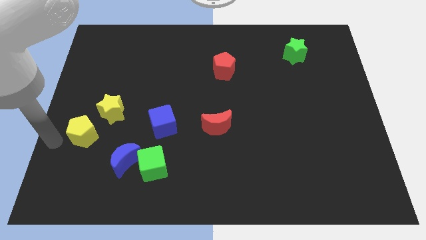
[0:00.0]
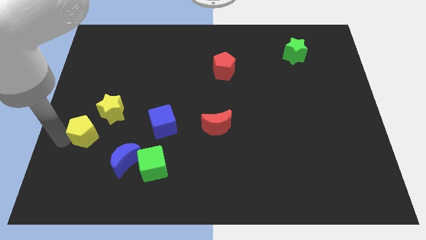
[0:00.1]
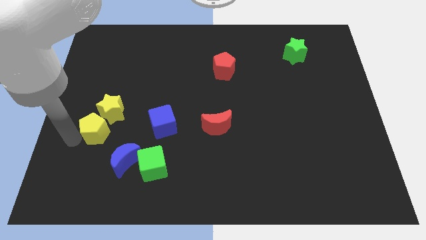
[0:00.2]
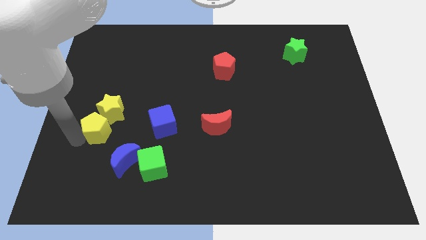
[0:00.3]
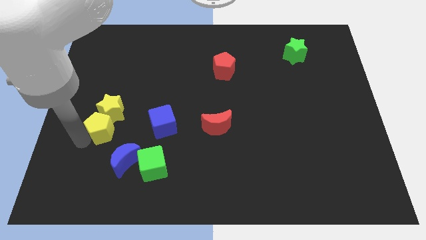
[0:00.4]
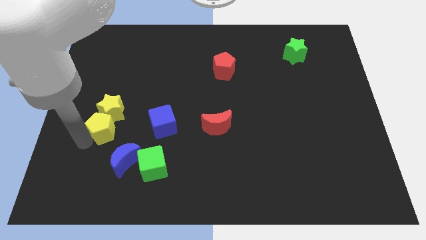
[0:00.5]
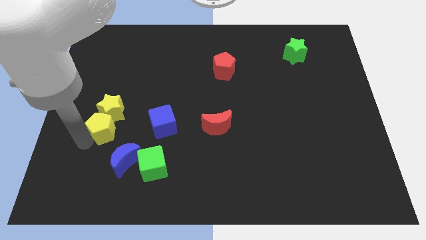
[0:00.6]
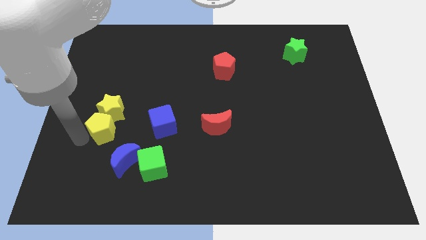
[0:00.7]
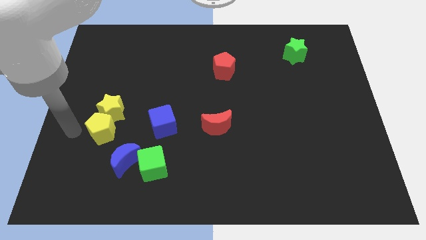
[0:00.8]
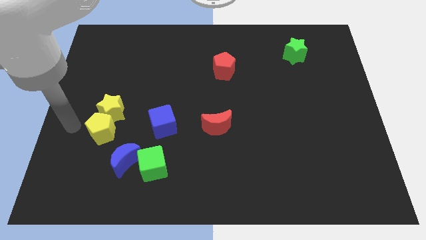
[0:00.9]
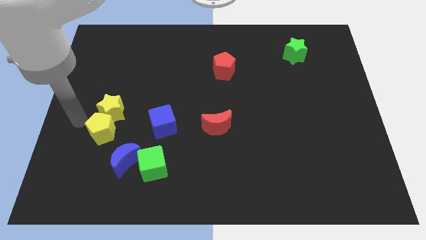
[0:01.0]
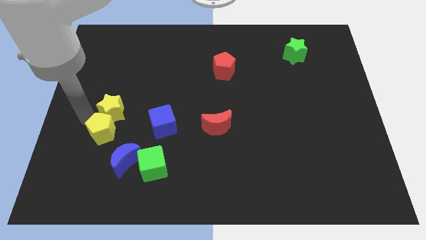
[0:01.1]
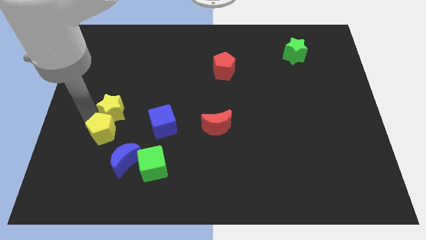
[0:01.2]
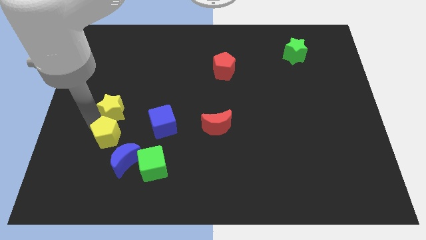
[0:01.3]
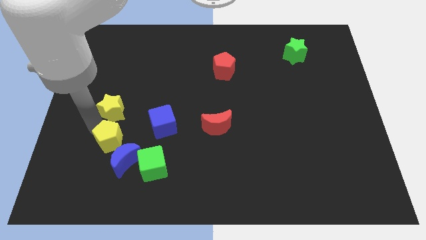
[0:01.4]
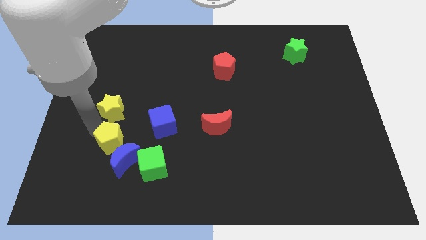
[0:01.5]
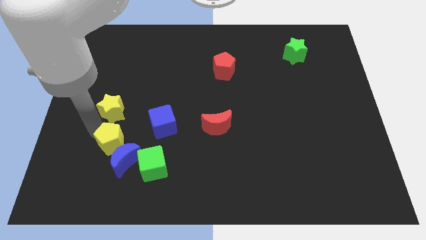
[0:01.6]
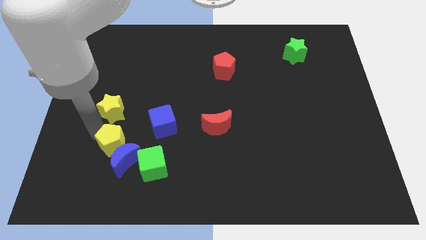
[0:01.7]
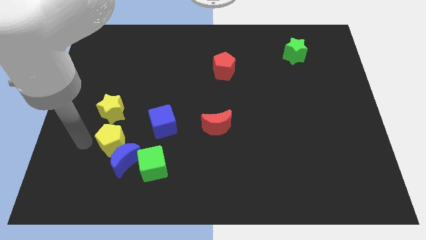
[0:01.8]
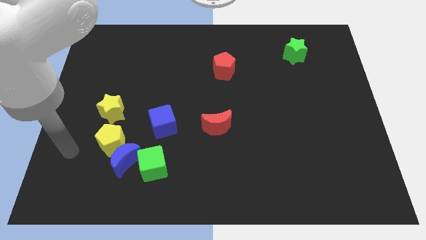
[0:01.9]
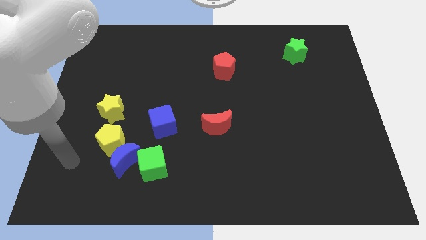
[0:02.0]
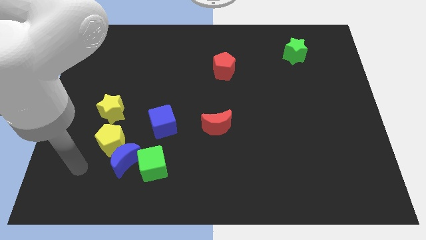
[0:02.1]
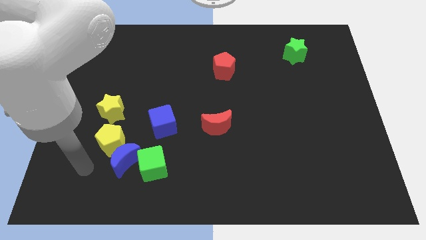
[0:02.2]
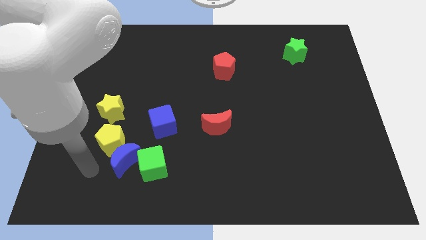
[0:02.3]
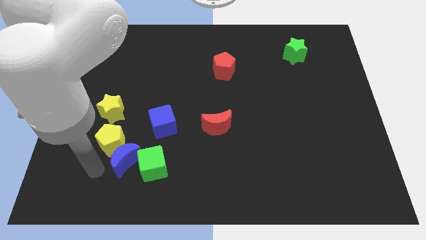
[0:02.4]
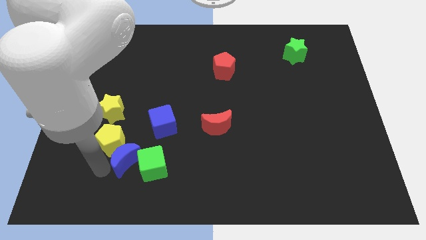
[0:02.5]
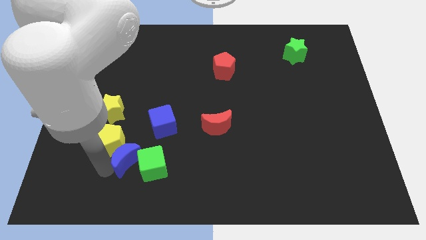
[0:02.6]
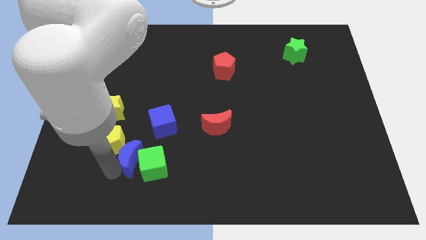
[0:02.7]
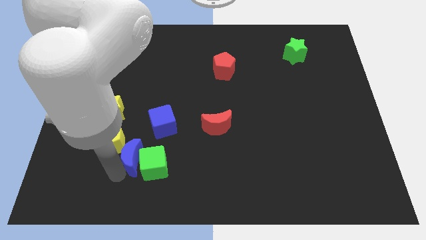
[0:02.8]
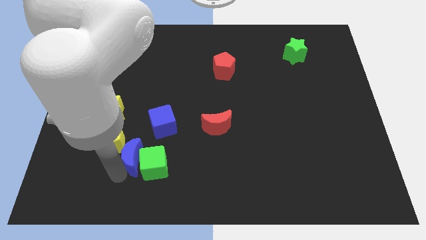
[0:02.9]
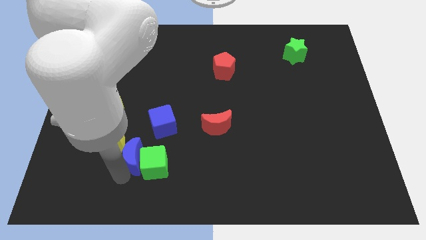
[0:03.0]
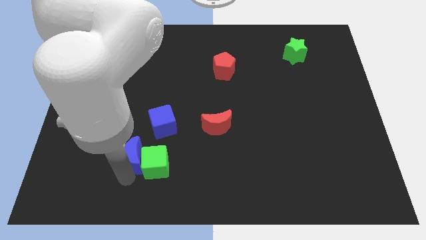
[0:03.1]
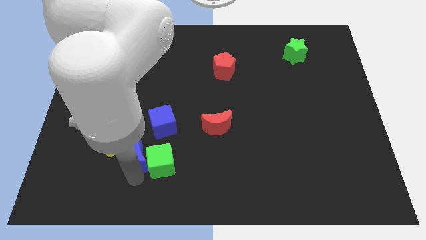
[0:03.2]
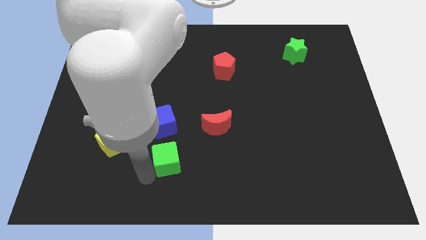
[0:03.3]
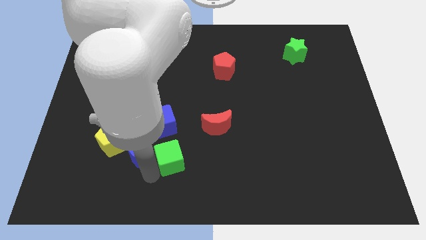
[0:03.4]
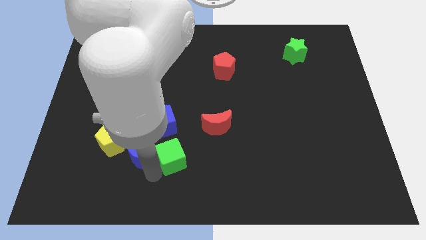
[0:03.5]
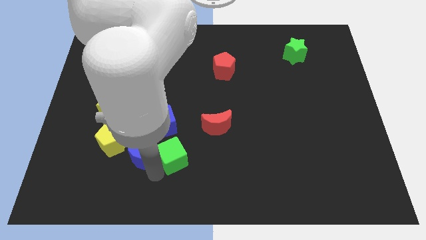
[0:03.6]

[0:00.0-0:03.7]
move yellow pentagon blue moon green square to the group of blocks

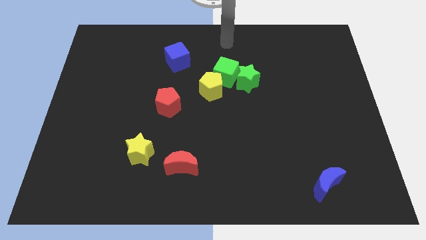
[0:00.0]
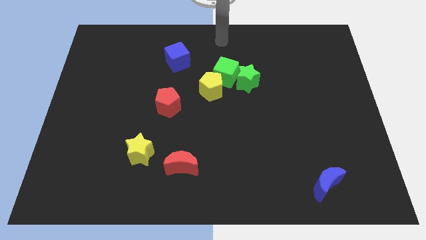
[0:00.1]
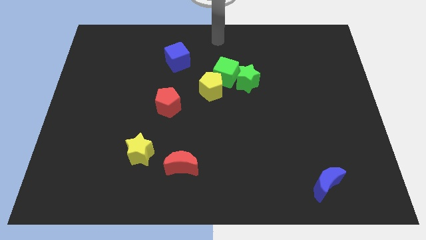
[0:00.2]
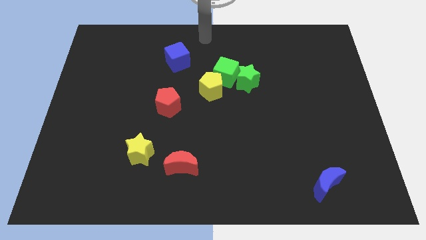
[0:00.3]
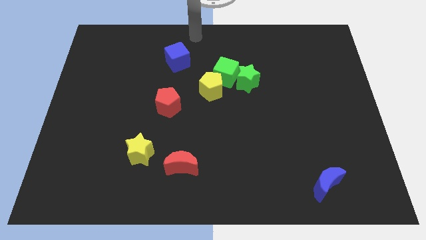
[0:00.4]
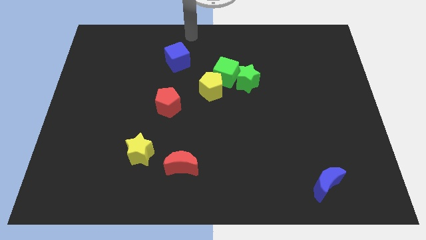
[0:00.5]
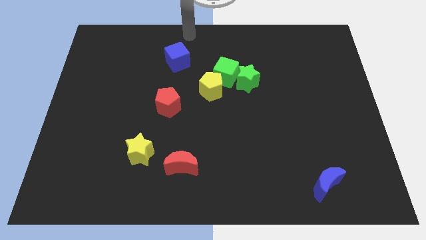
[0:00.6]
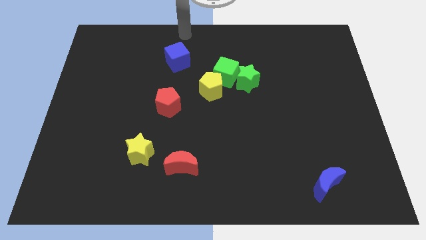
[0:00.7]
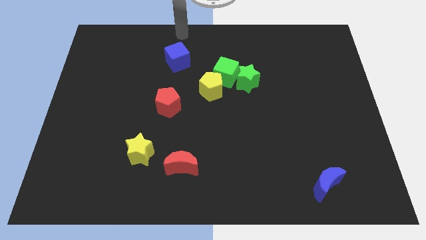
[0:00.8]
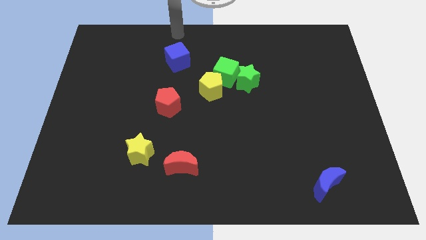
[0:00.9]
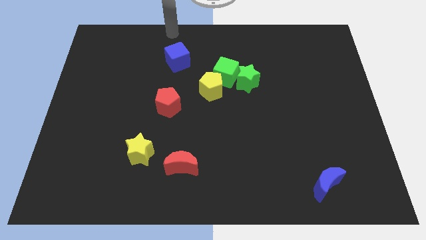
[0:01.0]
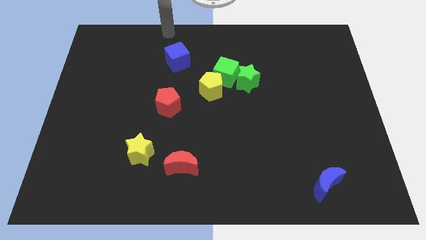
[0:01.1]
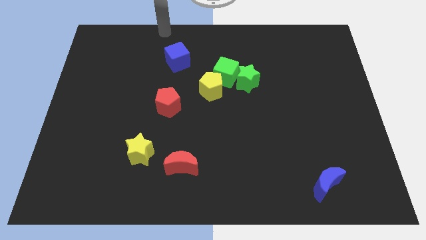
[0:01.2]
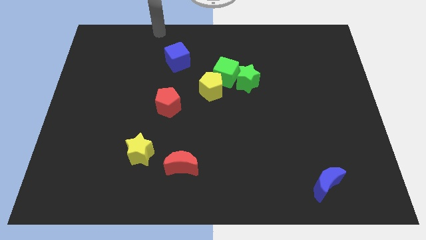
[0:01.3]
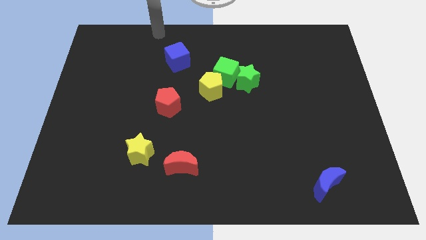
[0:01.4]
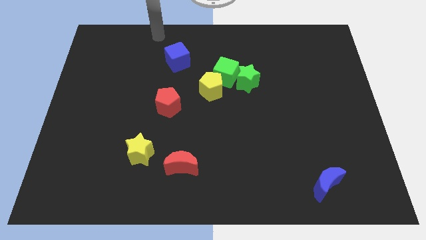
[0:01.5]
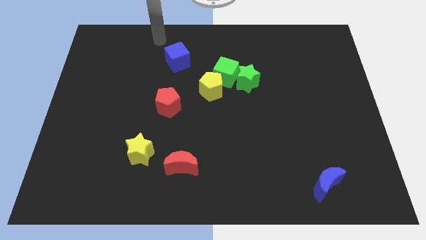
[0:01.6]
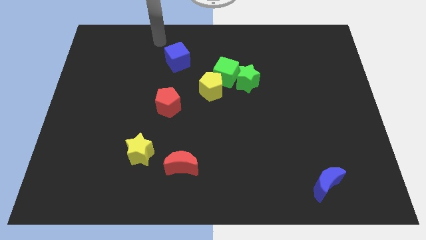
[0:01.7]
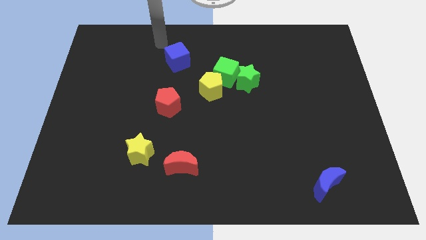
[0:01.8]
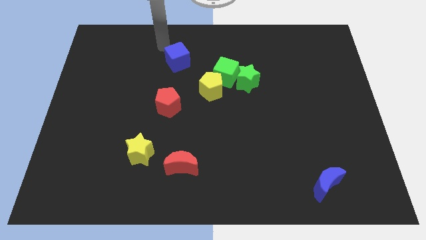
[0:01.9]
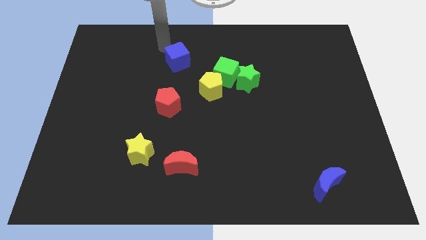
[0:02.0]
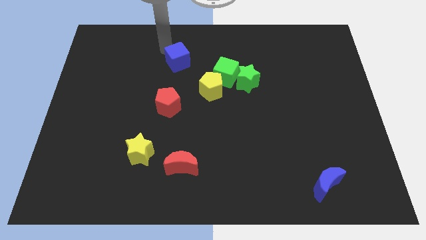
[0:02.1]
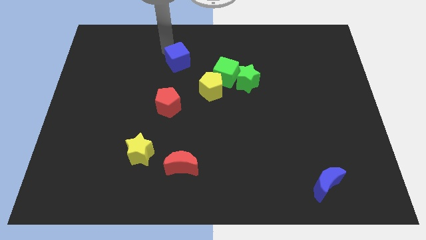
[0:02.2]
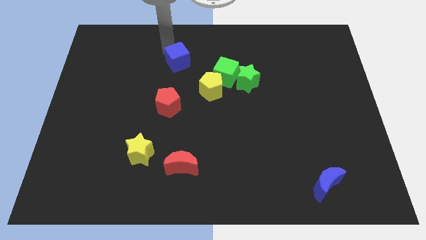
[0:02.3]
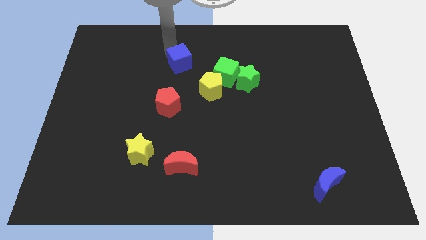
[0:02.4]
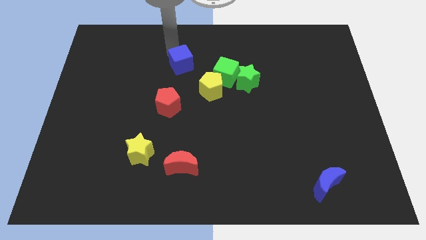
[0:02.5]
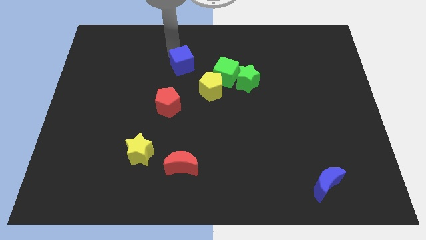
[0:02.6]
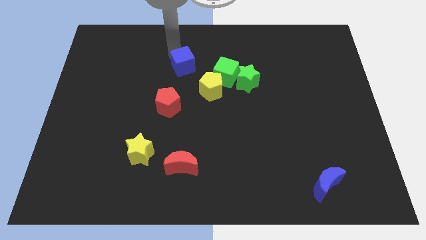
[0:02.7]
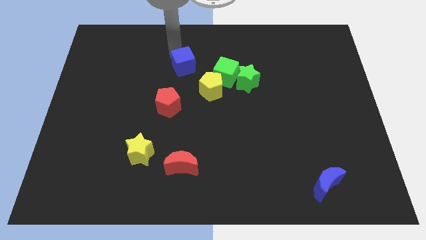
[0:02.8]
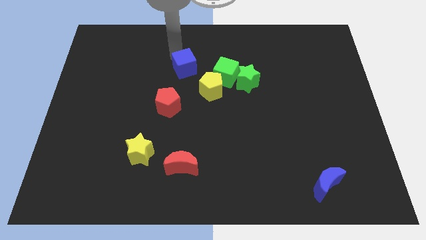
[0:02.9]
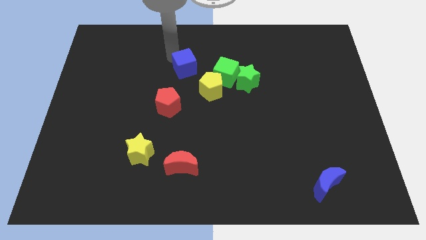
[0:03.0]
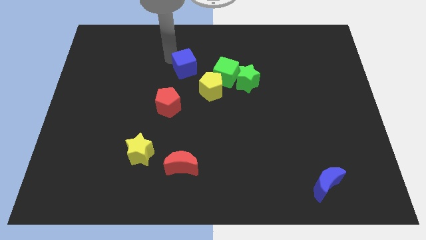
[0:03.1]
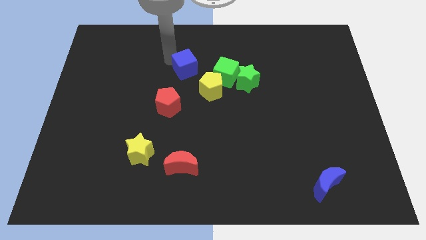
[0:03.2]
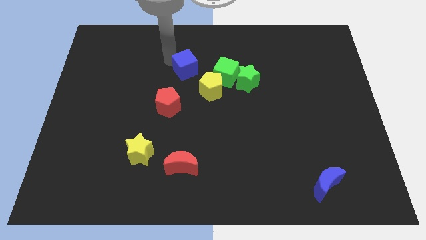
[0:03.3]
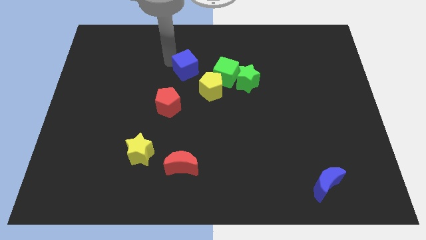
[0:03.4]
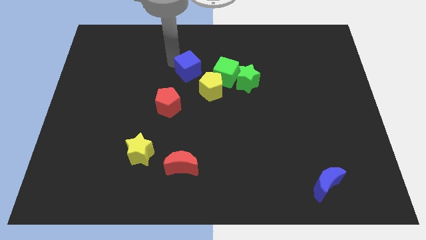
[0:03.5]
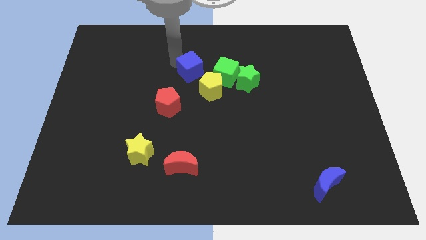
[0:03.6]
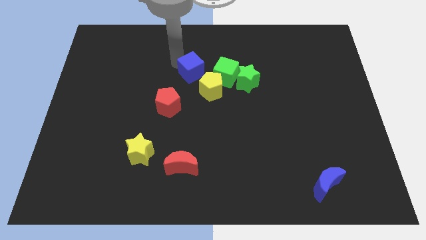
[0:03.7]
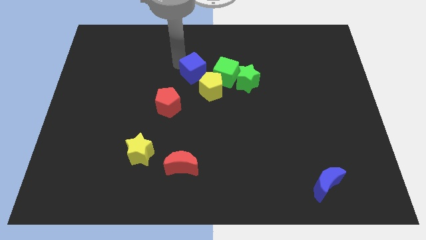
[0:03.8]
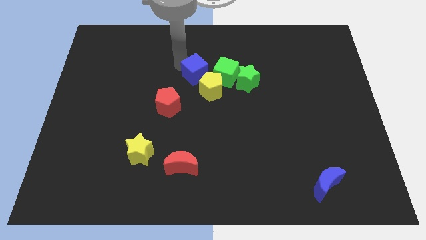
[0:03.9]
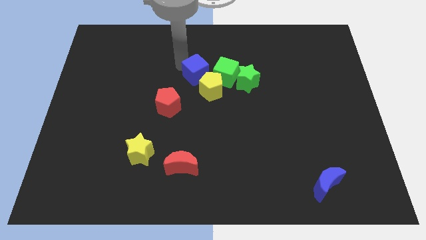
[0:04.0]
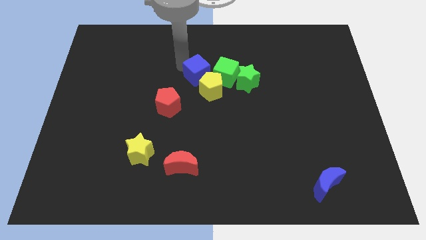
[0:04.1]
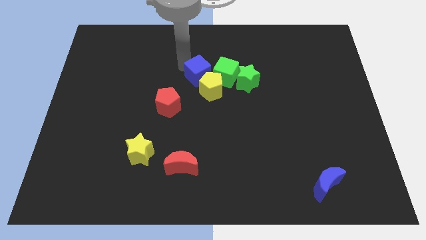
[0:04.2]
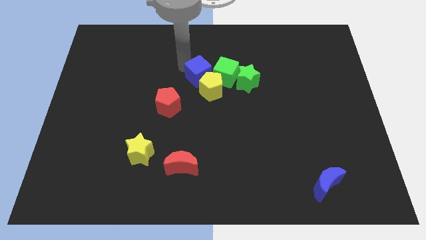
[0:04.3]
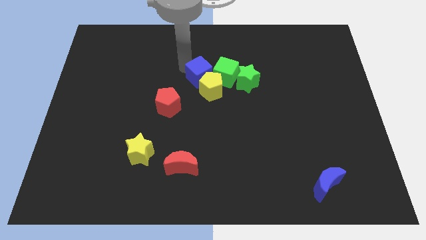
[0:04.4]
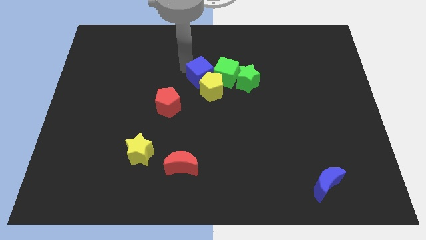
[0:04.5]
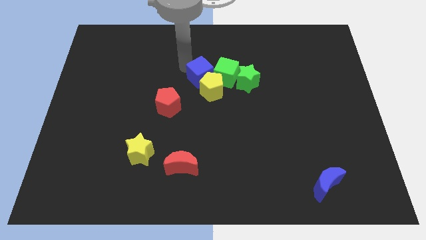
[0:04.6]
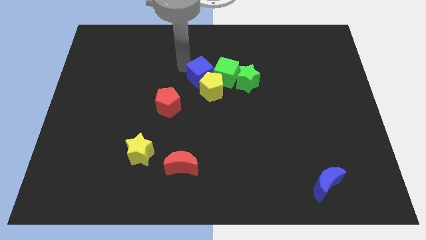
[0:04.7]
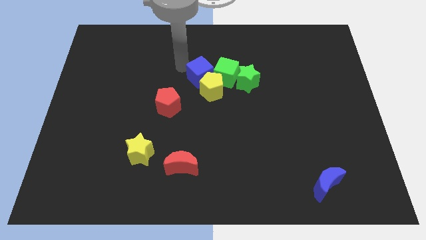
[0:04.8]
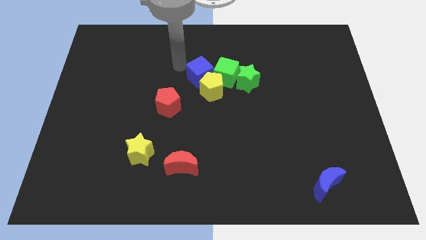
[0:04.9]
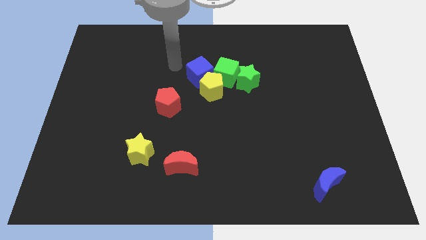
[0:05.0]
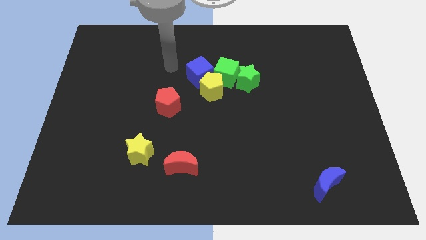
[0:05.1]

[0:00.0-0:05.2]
move the blue cube to the left of the green cube

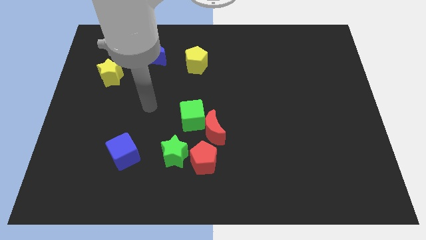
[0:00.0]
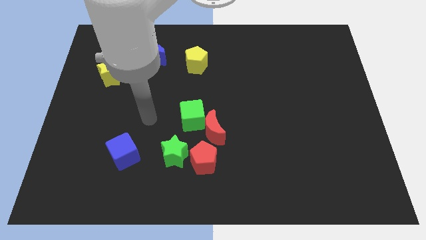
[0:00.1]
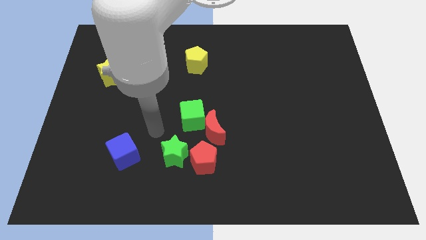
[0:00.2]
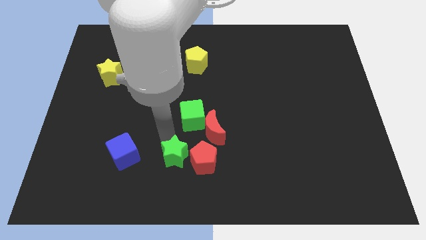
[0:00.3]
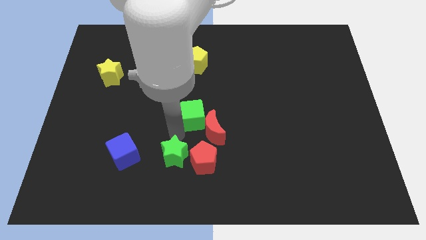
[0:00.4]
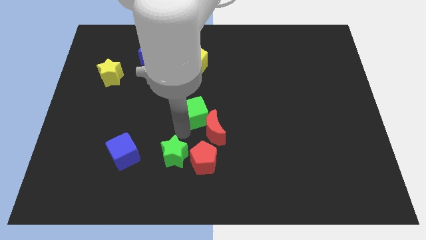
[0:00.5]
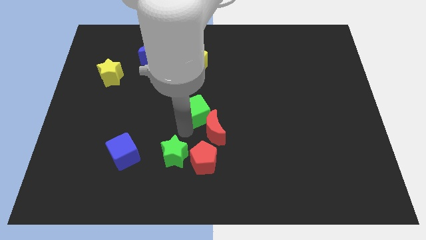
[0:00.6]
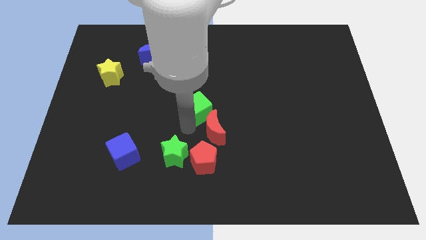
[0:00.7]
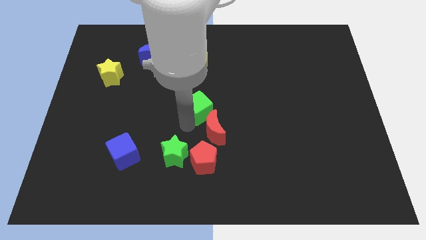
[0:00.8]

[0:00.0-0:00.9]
move green cube slightly up
